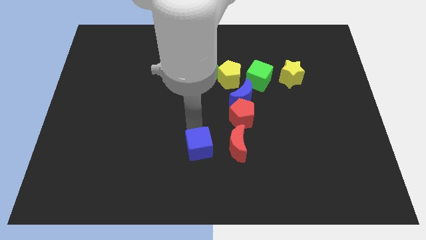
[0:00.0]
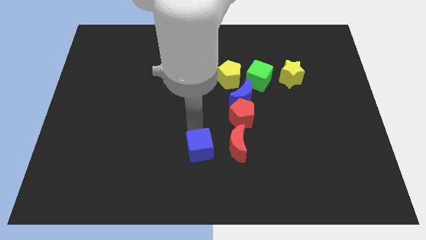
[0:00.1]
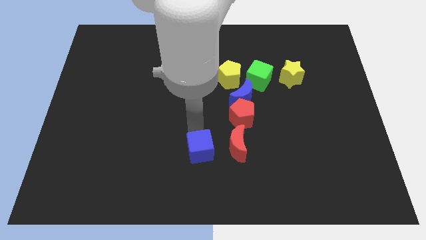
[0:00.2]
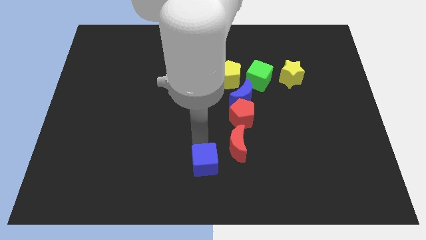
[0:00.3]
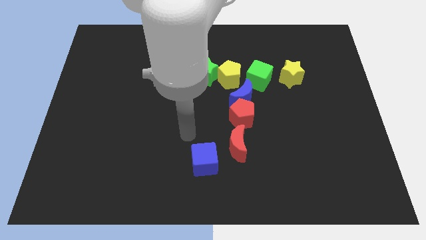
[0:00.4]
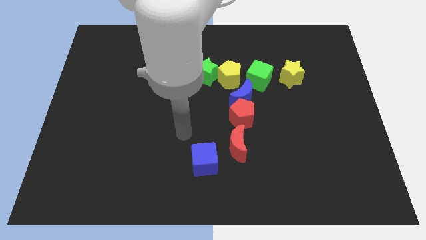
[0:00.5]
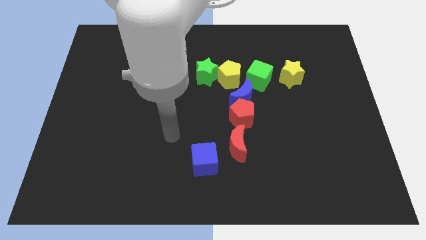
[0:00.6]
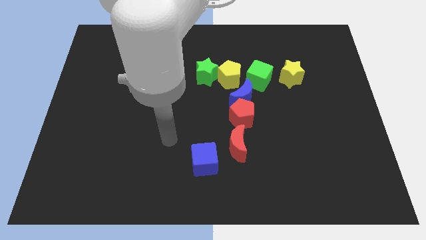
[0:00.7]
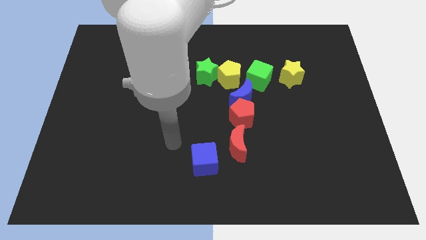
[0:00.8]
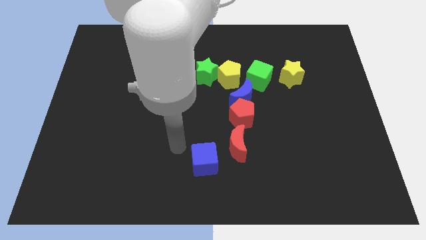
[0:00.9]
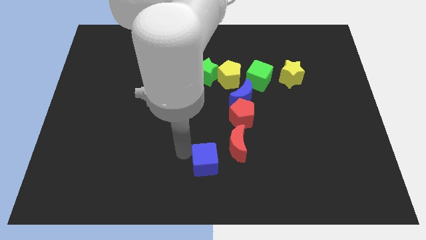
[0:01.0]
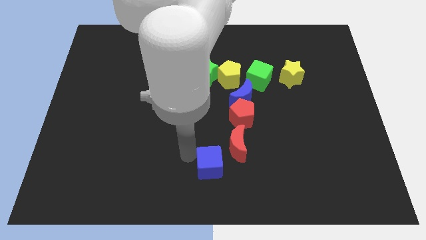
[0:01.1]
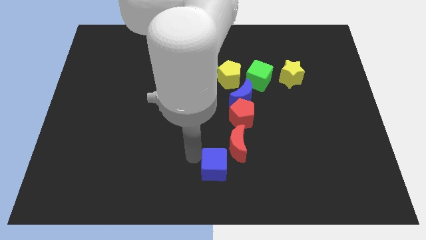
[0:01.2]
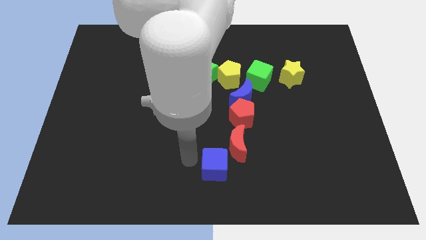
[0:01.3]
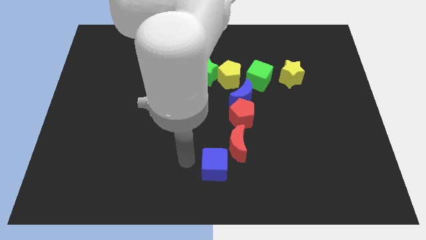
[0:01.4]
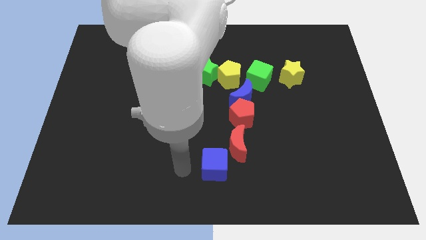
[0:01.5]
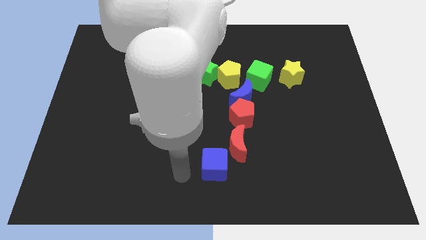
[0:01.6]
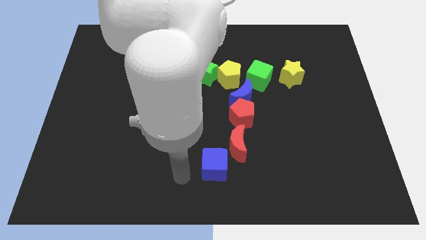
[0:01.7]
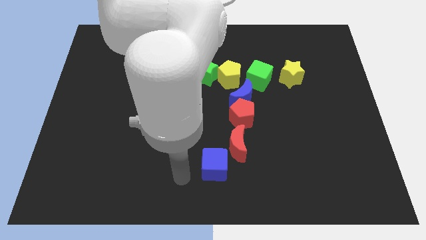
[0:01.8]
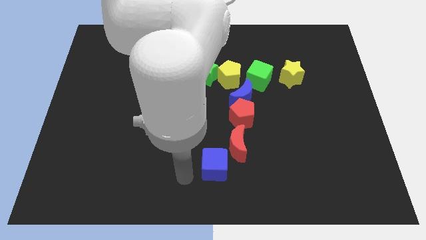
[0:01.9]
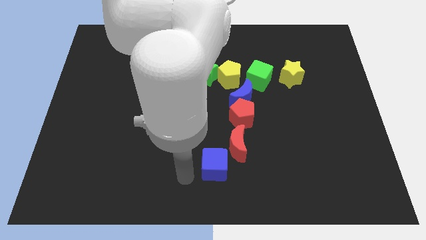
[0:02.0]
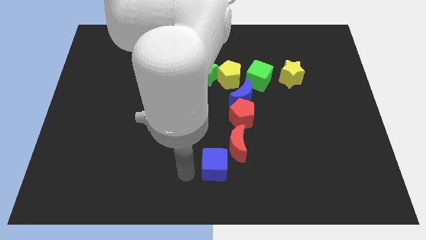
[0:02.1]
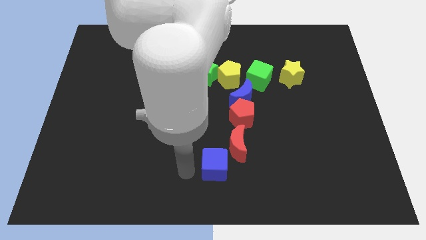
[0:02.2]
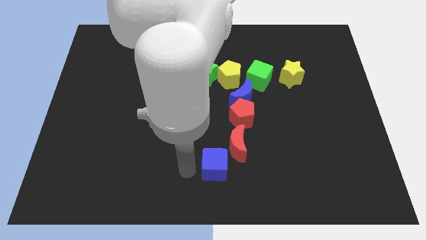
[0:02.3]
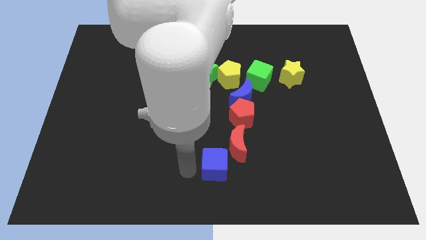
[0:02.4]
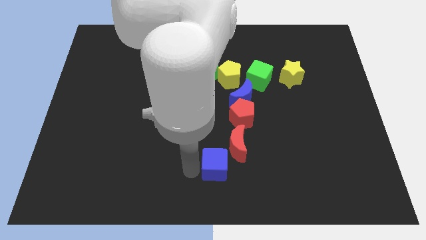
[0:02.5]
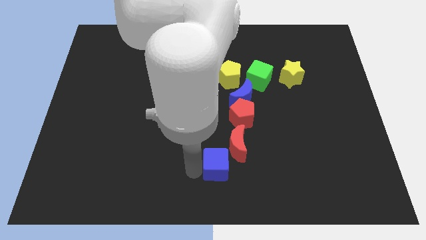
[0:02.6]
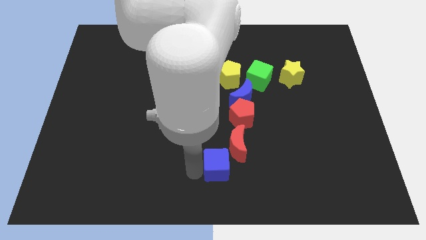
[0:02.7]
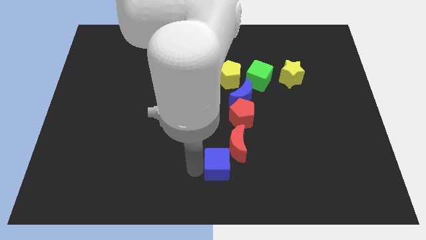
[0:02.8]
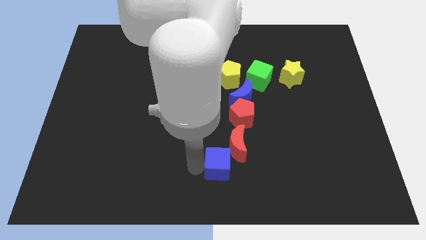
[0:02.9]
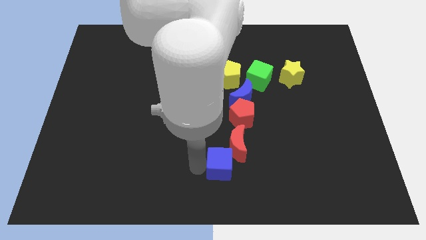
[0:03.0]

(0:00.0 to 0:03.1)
place the blue cube at the bottom left side of red moon

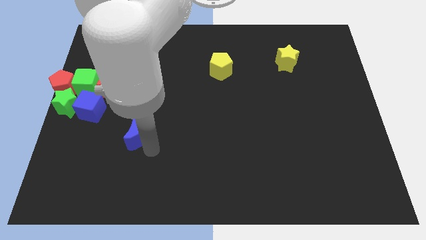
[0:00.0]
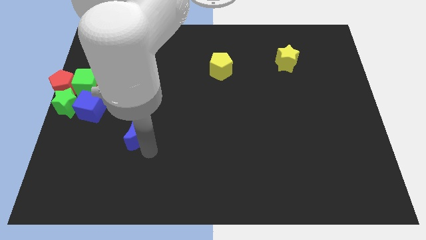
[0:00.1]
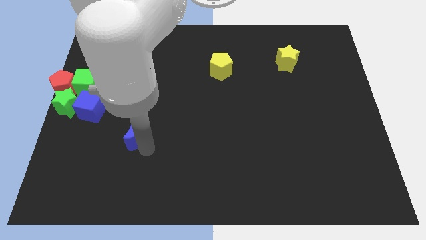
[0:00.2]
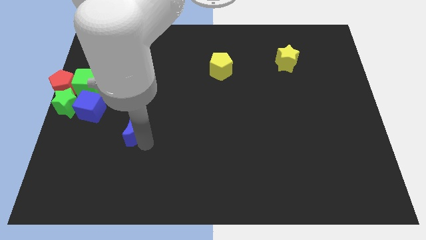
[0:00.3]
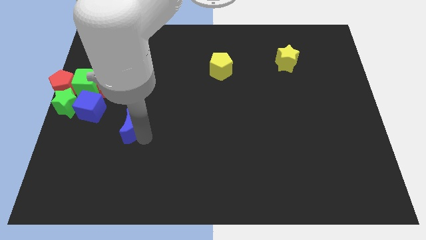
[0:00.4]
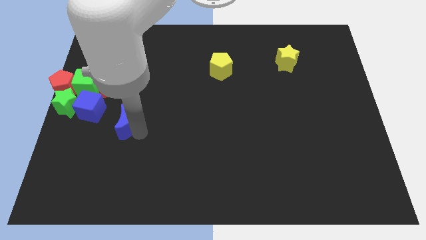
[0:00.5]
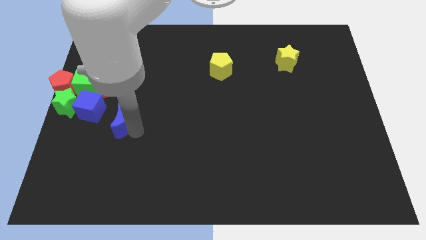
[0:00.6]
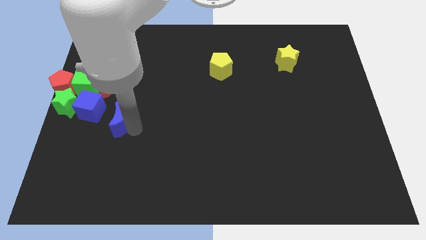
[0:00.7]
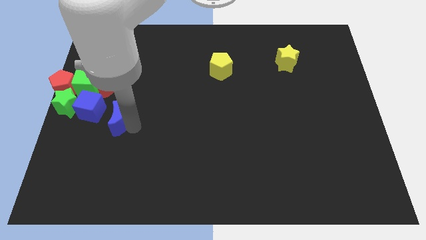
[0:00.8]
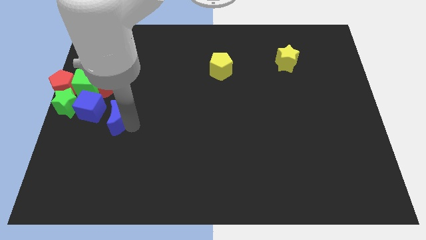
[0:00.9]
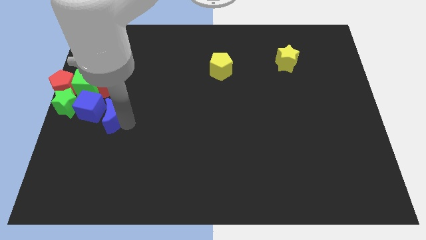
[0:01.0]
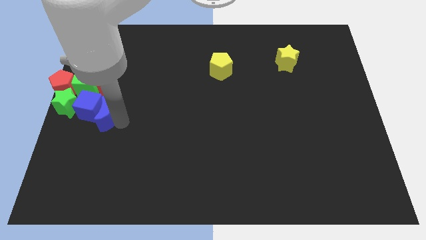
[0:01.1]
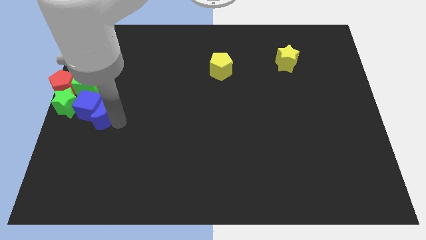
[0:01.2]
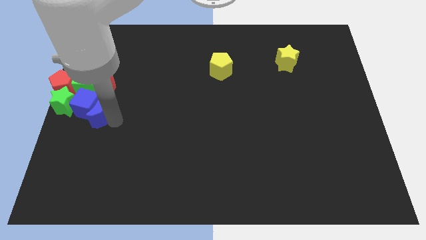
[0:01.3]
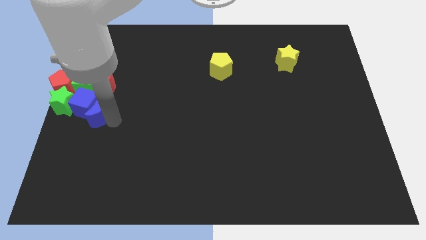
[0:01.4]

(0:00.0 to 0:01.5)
push the blue moon into the blue cube

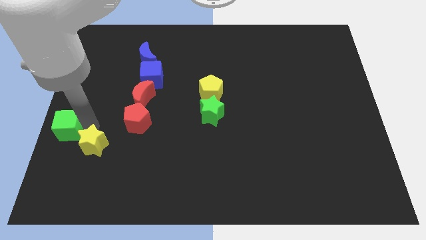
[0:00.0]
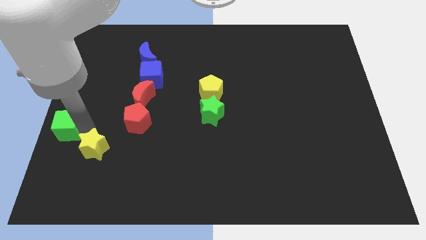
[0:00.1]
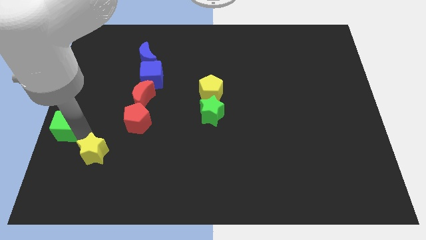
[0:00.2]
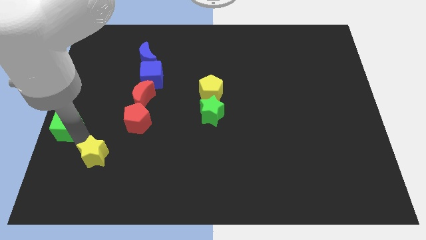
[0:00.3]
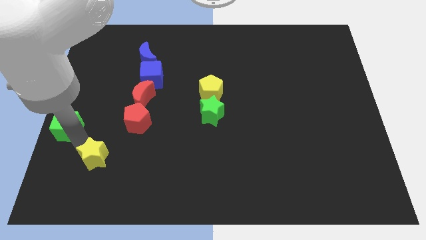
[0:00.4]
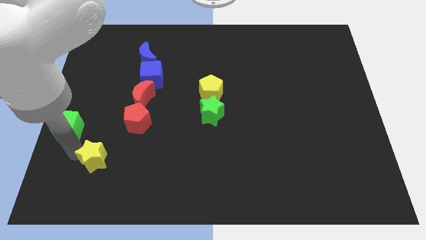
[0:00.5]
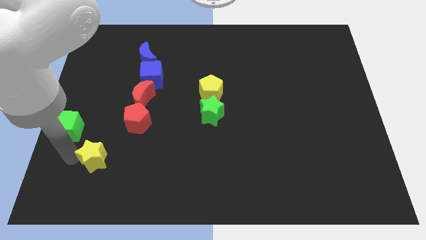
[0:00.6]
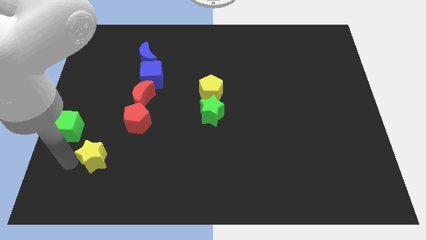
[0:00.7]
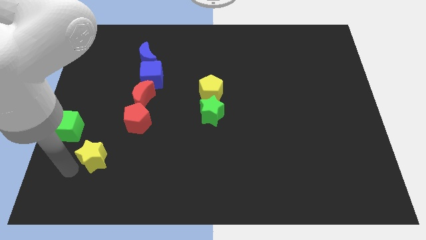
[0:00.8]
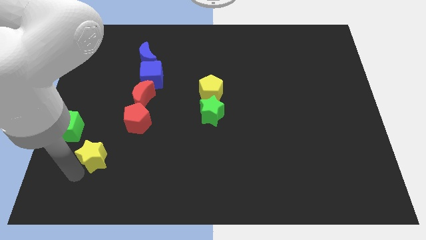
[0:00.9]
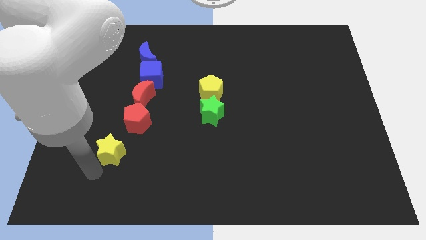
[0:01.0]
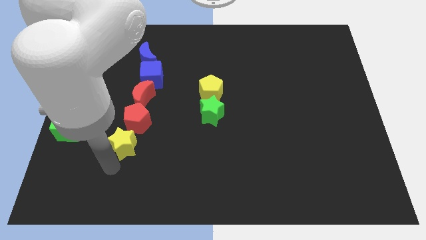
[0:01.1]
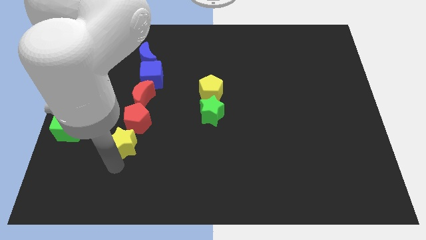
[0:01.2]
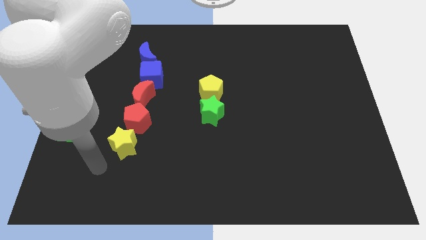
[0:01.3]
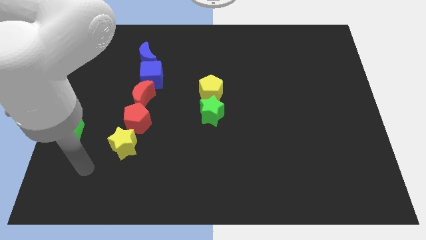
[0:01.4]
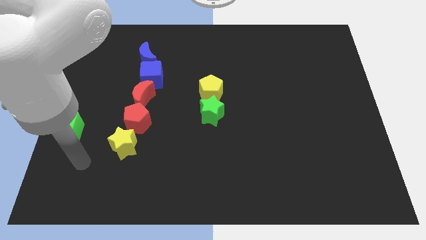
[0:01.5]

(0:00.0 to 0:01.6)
place the yellow star below the red pentagon

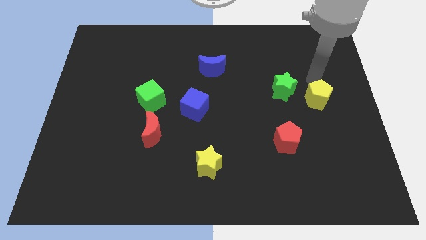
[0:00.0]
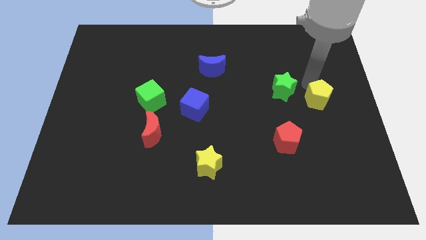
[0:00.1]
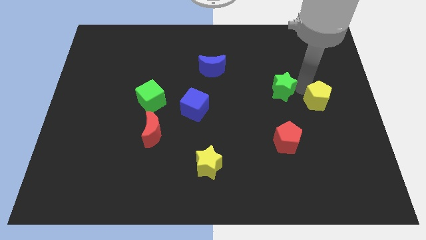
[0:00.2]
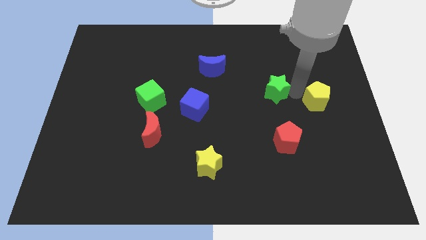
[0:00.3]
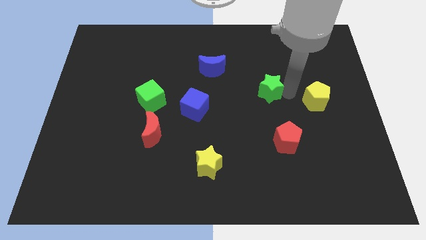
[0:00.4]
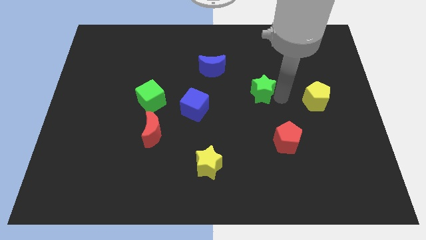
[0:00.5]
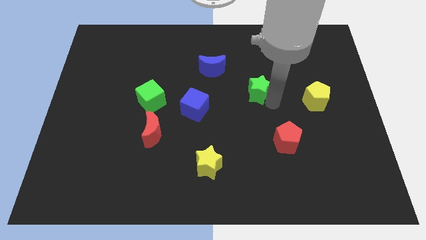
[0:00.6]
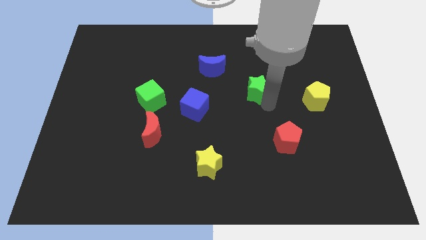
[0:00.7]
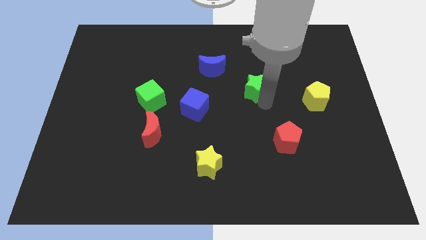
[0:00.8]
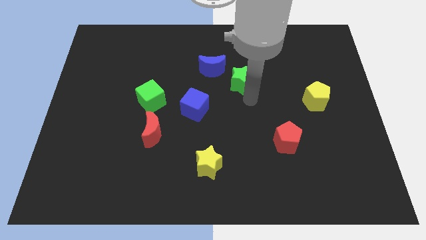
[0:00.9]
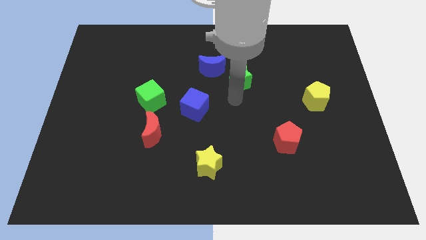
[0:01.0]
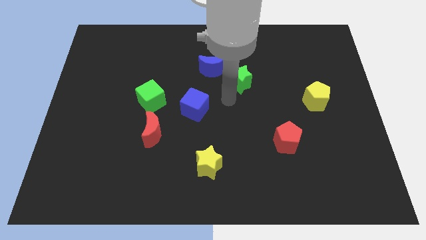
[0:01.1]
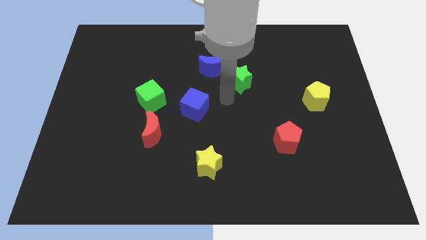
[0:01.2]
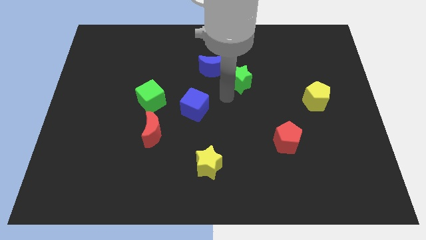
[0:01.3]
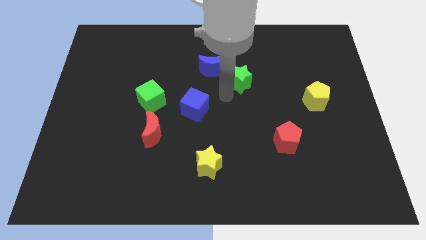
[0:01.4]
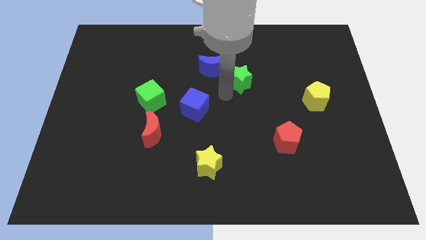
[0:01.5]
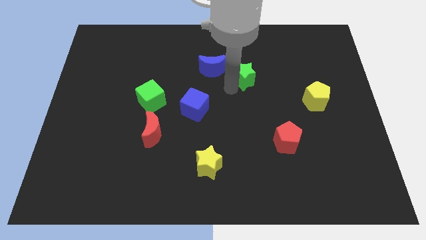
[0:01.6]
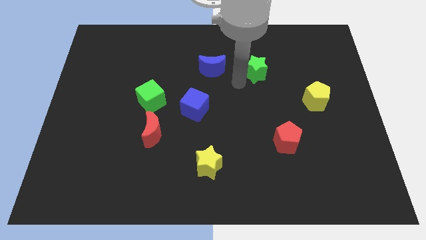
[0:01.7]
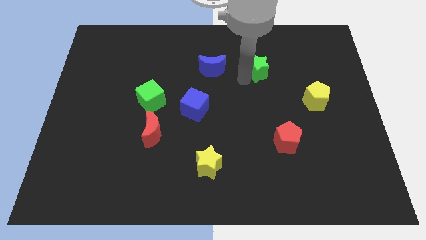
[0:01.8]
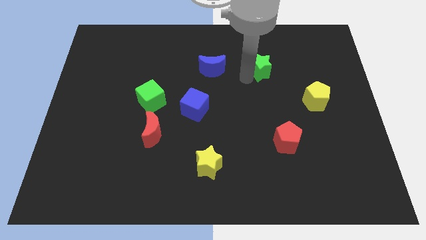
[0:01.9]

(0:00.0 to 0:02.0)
slightly move the green star in between the blue moon and the yellow pentagon

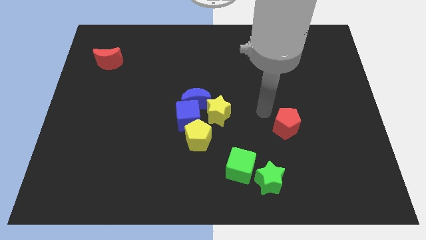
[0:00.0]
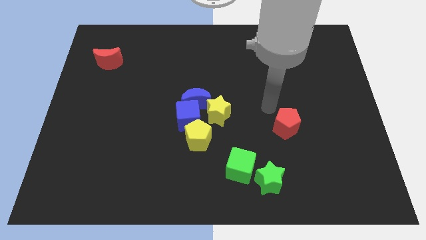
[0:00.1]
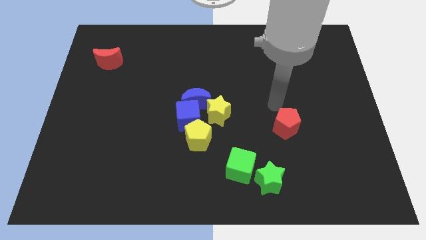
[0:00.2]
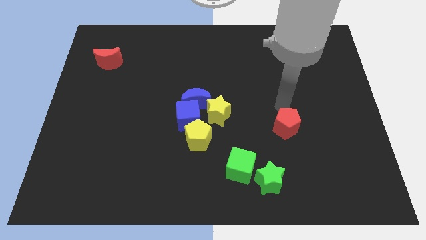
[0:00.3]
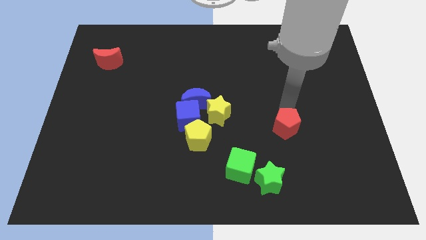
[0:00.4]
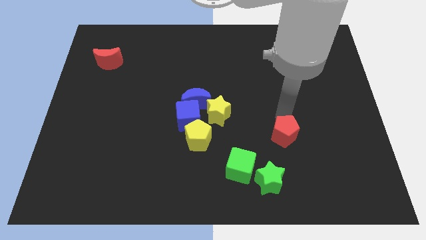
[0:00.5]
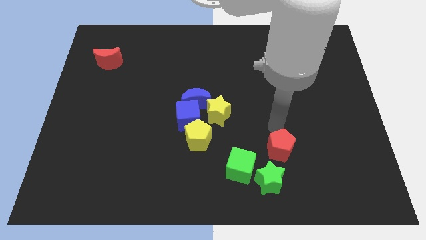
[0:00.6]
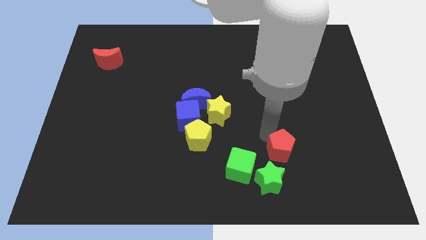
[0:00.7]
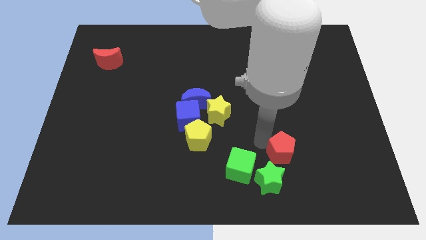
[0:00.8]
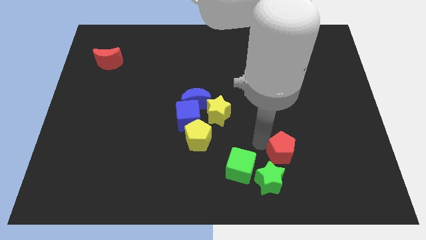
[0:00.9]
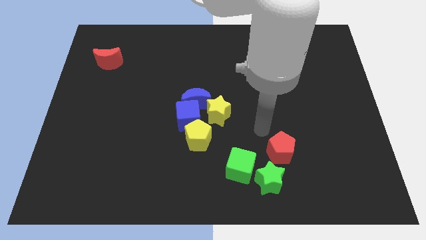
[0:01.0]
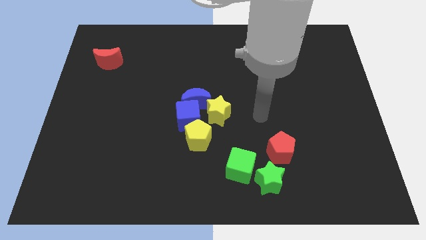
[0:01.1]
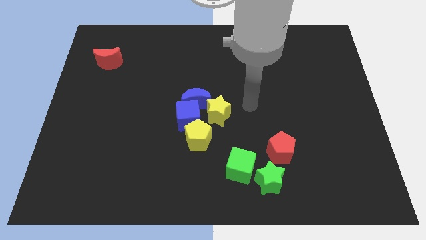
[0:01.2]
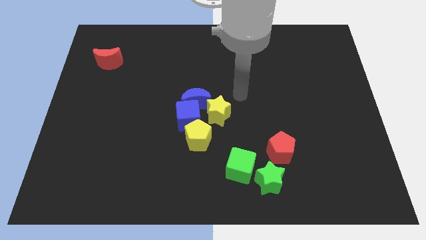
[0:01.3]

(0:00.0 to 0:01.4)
move the red pentagon at the top right of the green star
